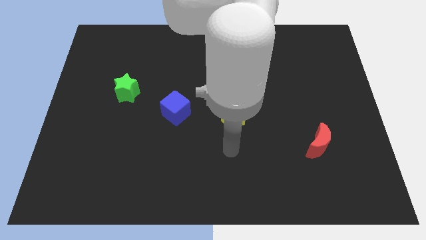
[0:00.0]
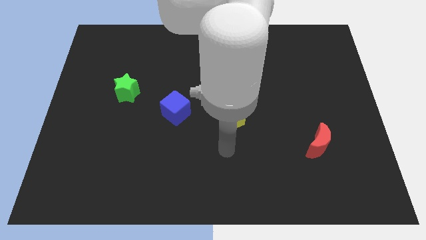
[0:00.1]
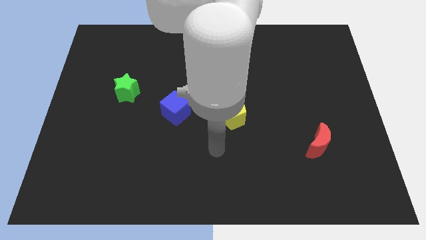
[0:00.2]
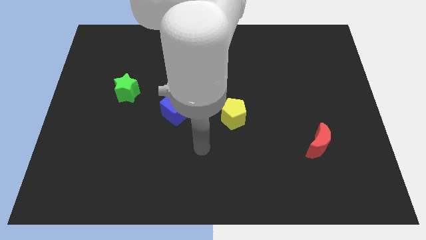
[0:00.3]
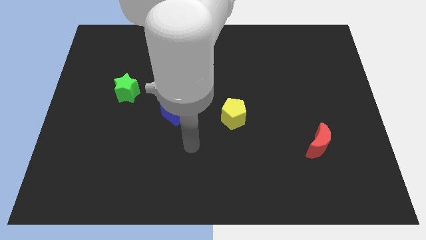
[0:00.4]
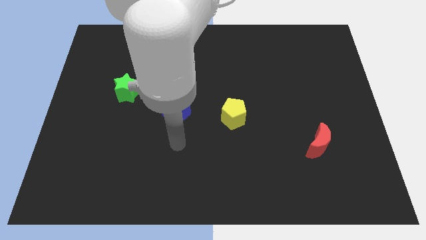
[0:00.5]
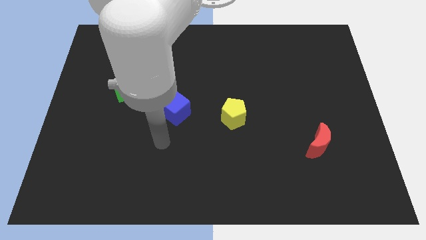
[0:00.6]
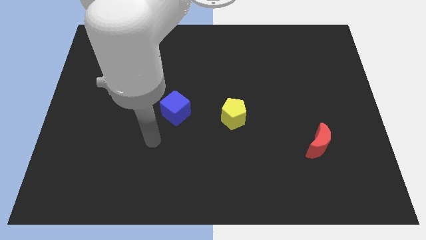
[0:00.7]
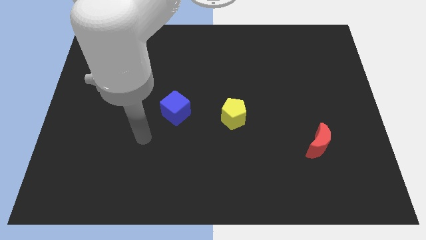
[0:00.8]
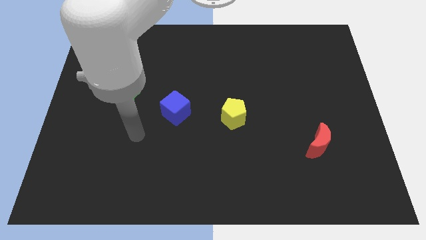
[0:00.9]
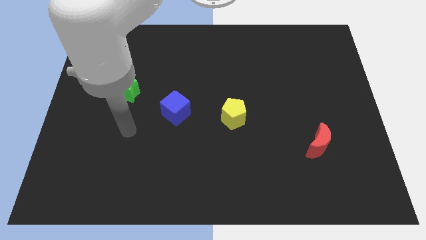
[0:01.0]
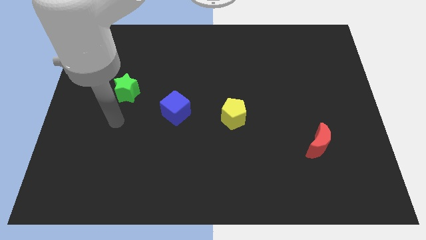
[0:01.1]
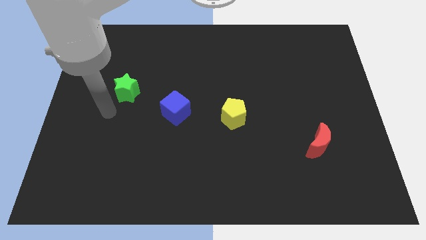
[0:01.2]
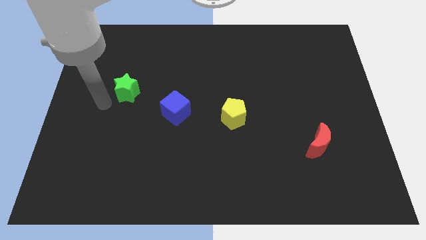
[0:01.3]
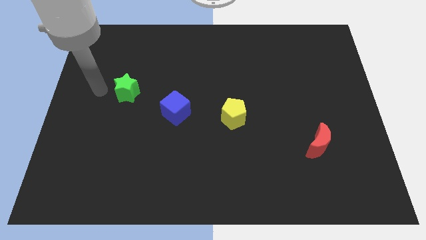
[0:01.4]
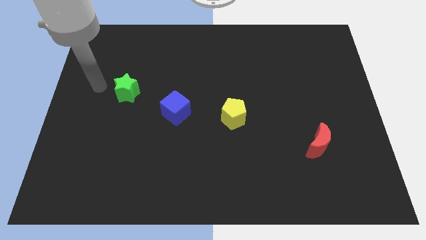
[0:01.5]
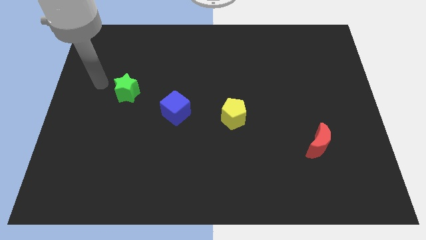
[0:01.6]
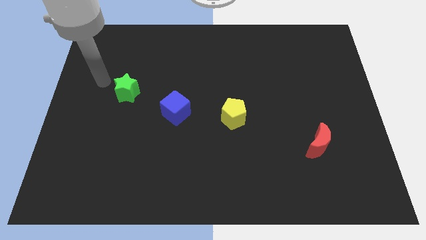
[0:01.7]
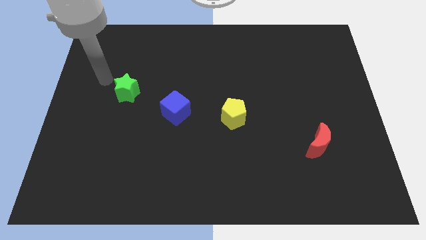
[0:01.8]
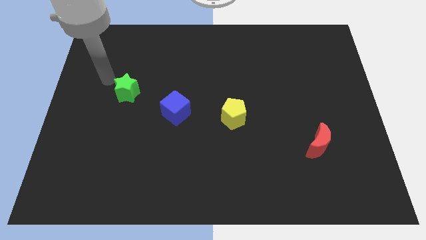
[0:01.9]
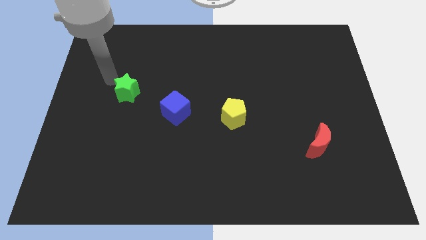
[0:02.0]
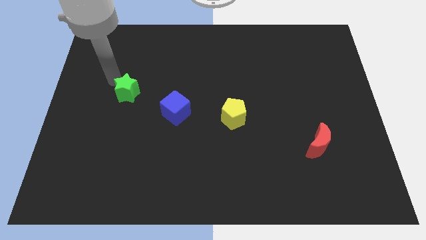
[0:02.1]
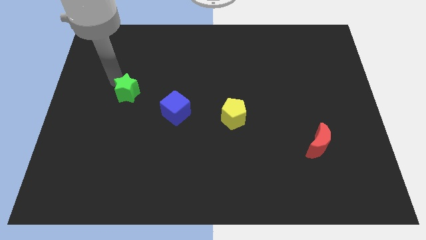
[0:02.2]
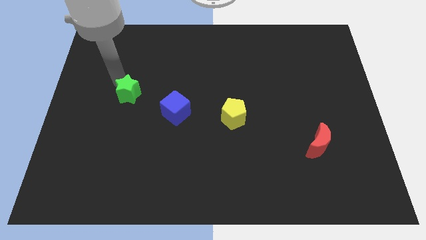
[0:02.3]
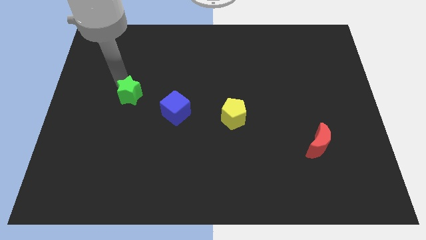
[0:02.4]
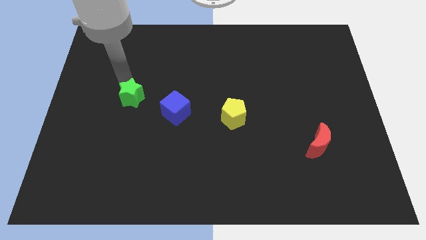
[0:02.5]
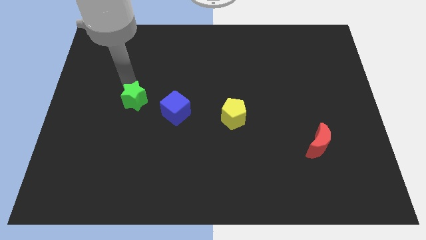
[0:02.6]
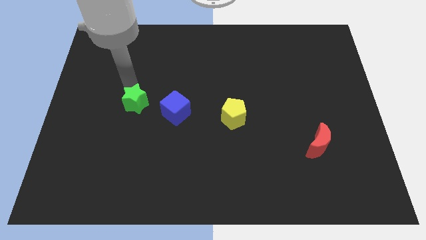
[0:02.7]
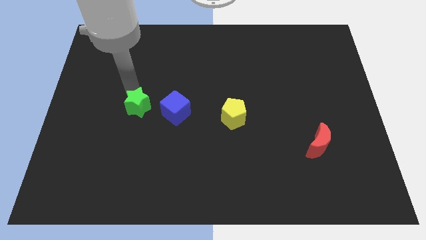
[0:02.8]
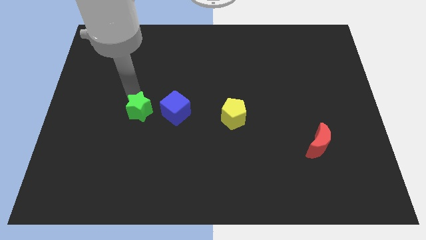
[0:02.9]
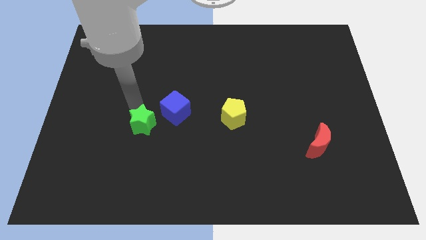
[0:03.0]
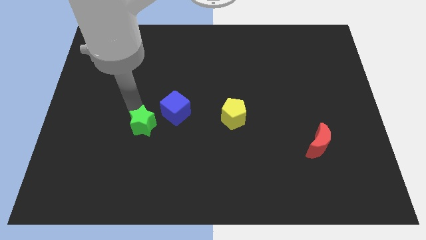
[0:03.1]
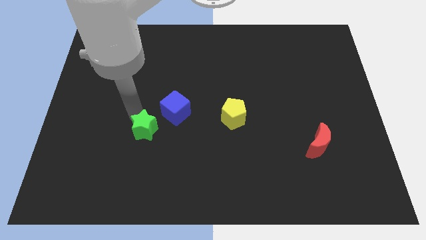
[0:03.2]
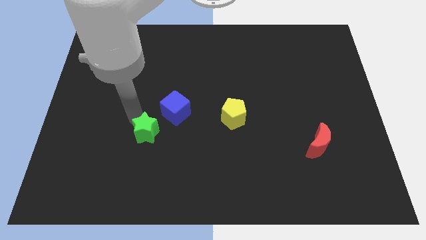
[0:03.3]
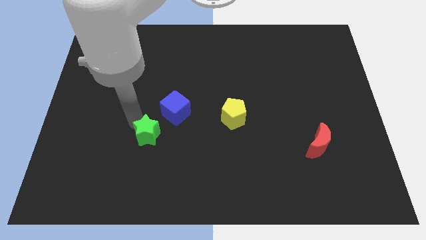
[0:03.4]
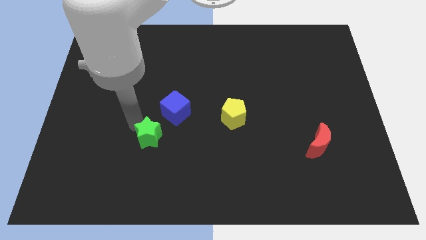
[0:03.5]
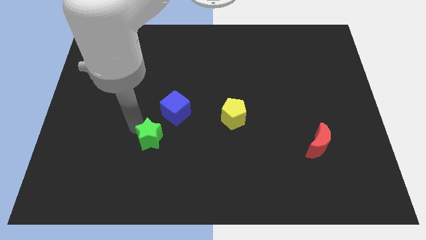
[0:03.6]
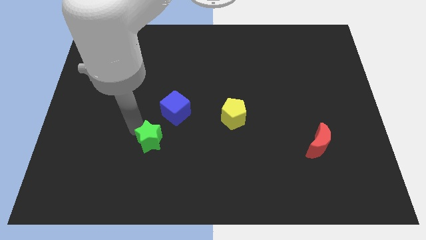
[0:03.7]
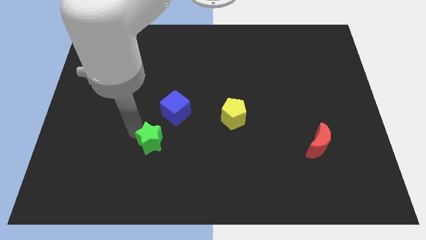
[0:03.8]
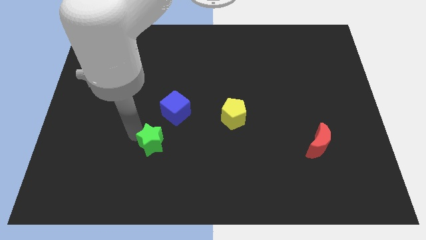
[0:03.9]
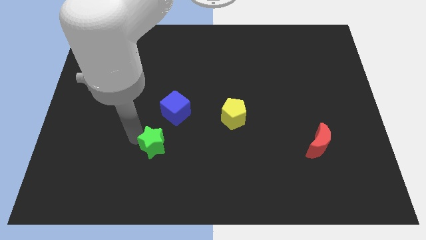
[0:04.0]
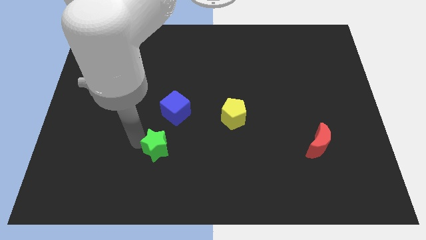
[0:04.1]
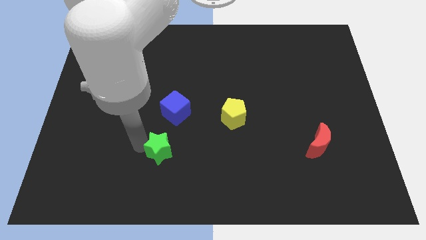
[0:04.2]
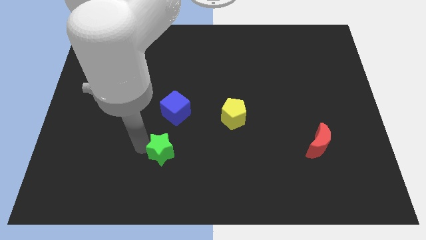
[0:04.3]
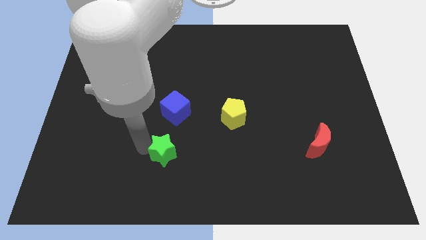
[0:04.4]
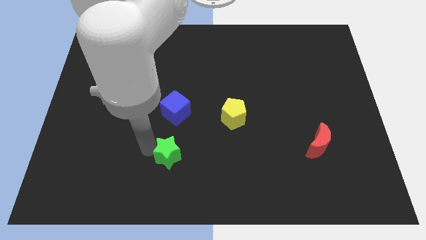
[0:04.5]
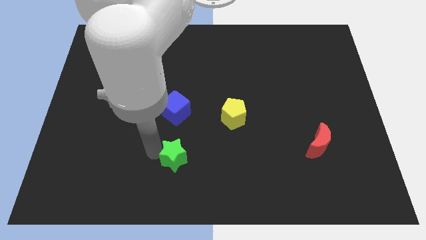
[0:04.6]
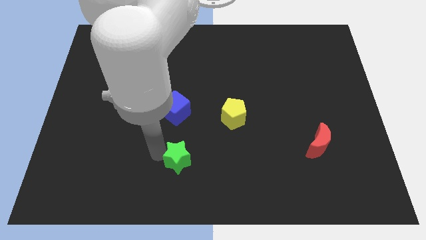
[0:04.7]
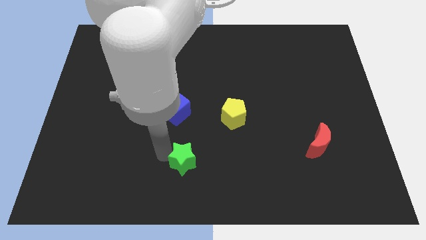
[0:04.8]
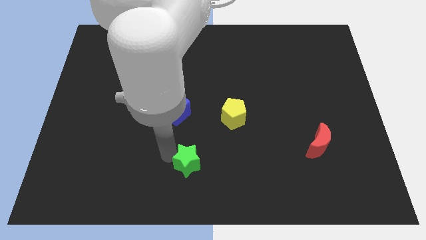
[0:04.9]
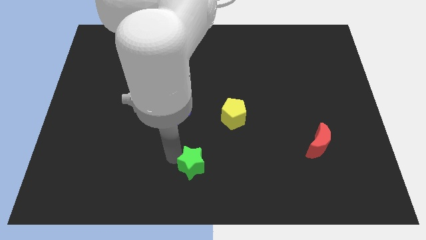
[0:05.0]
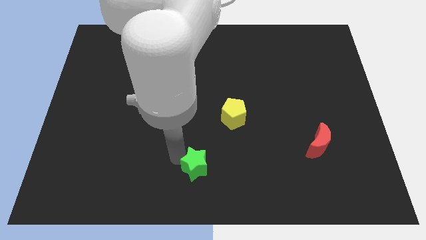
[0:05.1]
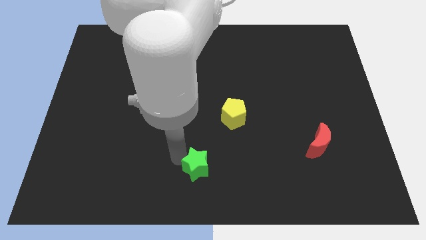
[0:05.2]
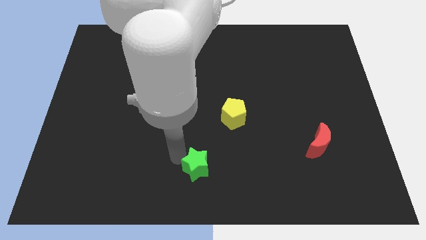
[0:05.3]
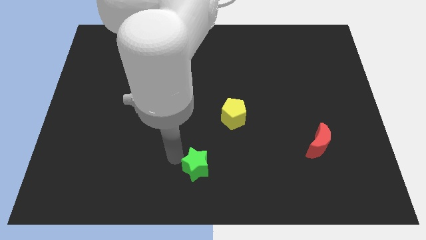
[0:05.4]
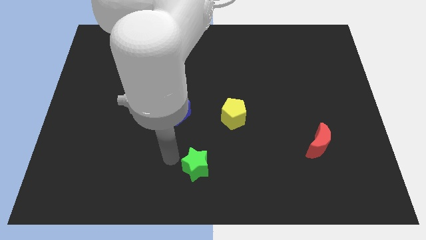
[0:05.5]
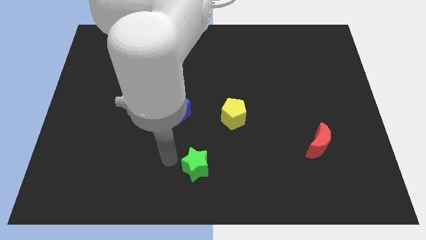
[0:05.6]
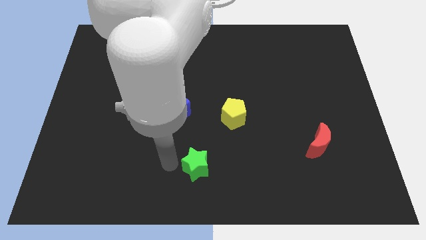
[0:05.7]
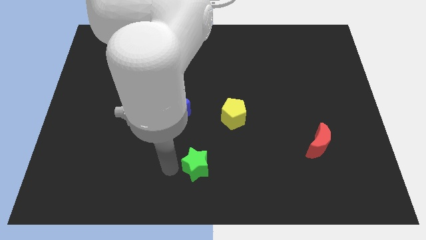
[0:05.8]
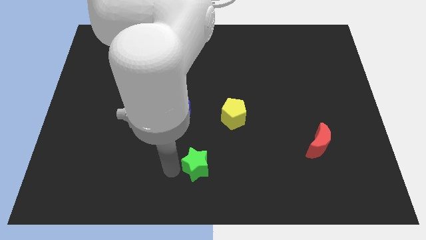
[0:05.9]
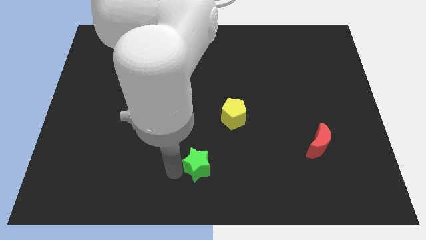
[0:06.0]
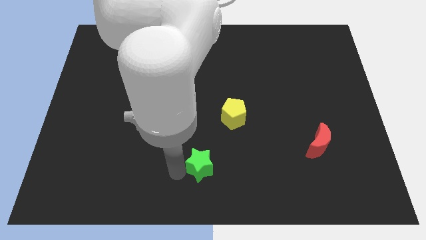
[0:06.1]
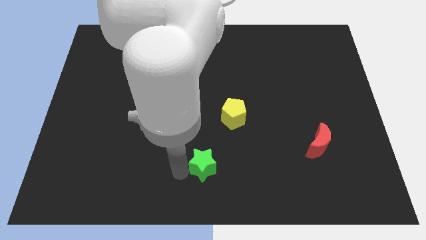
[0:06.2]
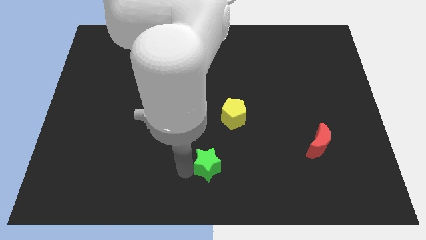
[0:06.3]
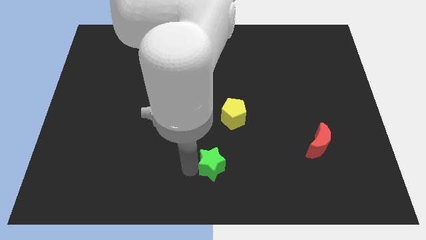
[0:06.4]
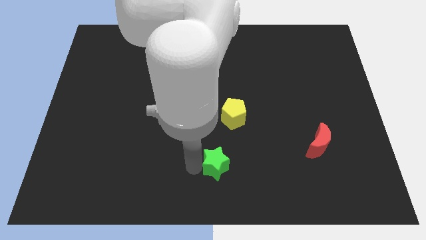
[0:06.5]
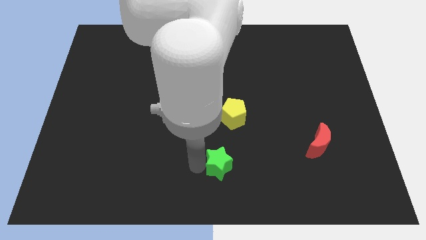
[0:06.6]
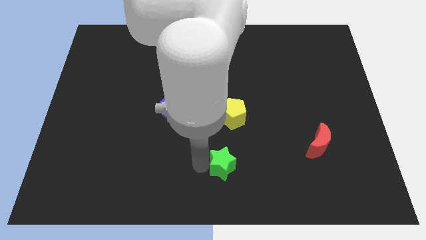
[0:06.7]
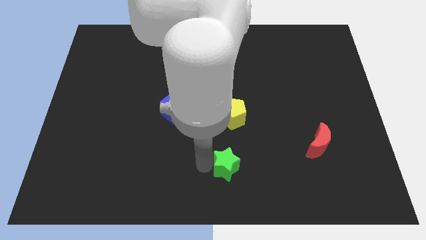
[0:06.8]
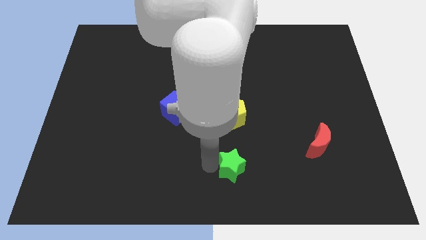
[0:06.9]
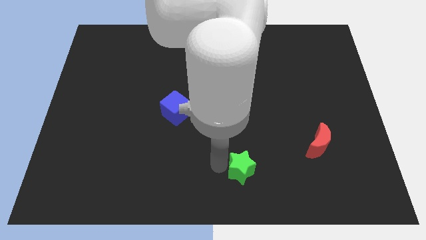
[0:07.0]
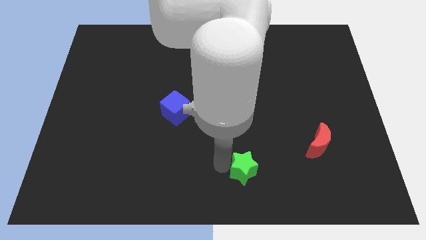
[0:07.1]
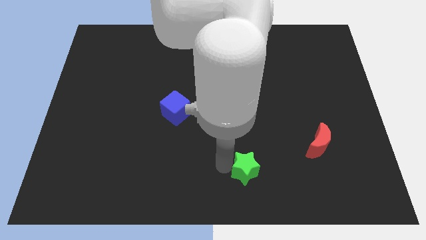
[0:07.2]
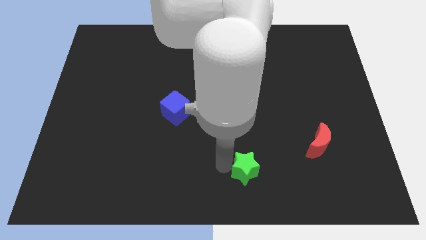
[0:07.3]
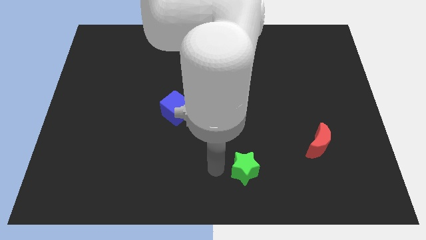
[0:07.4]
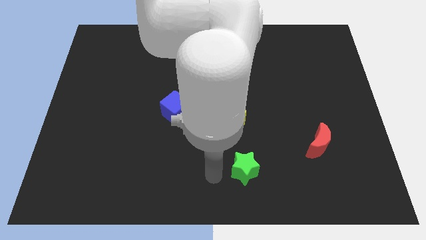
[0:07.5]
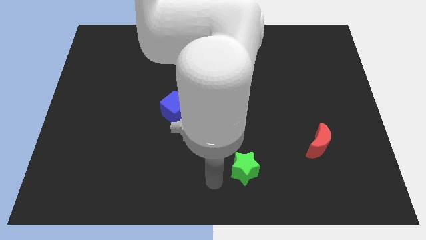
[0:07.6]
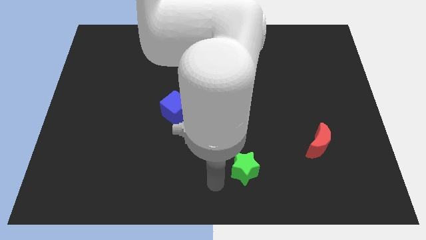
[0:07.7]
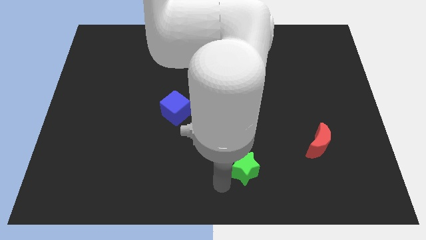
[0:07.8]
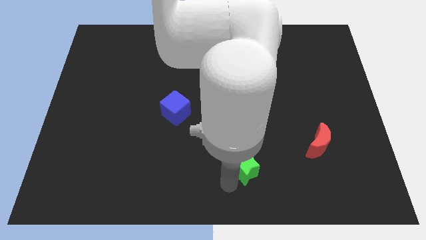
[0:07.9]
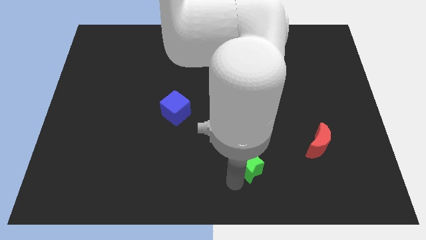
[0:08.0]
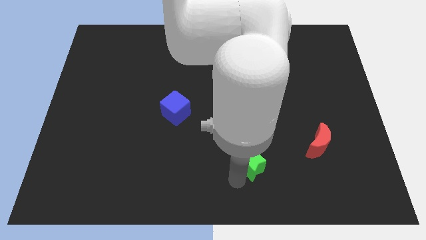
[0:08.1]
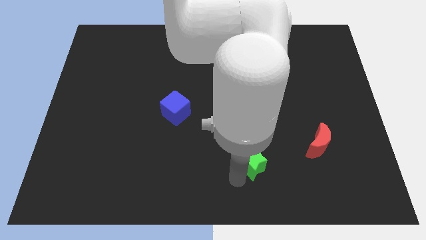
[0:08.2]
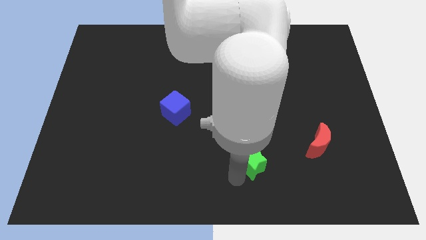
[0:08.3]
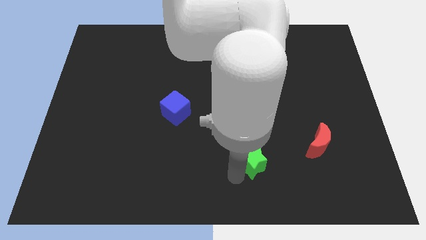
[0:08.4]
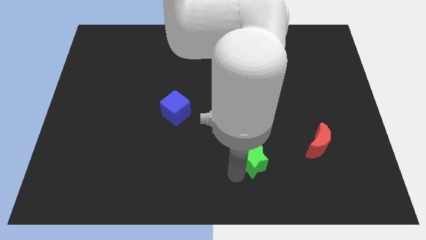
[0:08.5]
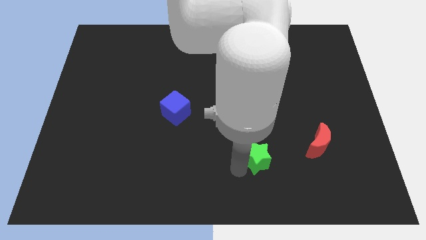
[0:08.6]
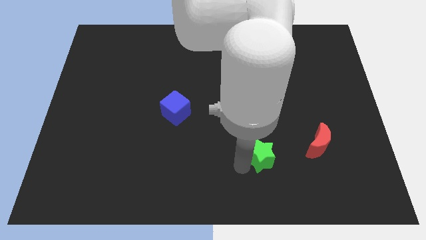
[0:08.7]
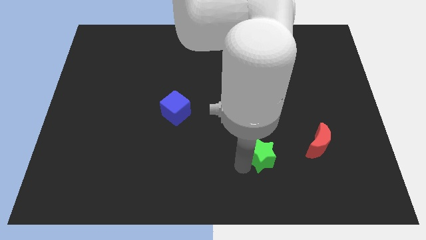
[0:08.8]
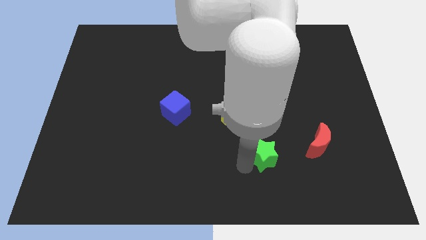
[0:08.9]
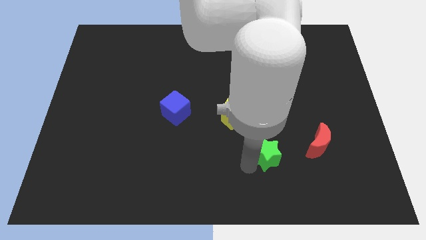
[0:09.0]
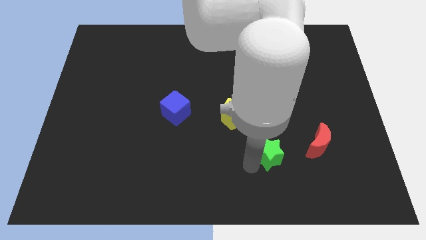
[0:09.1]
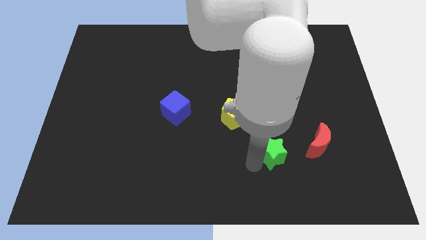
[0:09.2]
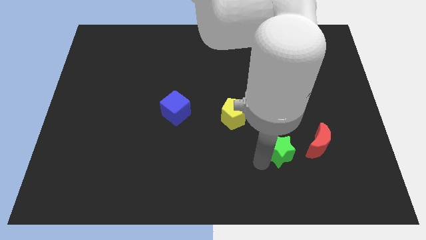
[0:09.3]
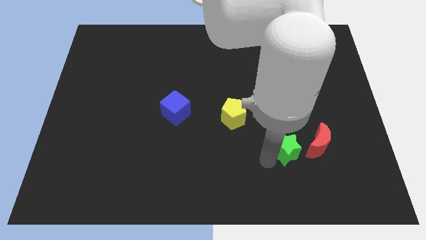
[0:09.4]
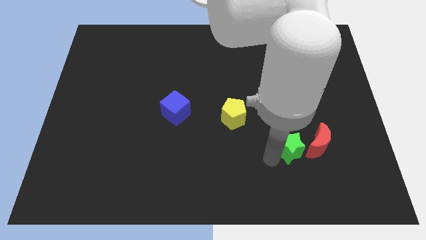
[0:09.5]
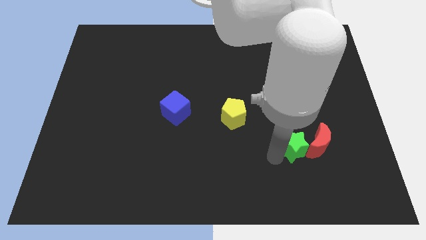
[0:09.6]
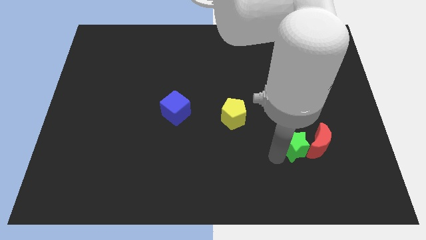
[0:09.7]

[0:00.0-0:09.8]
push the green block towards the red block
